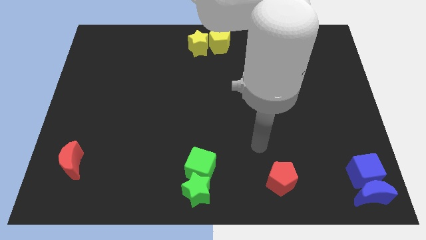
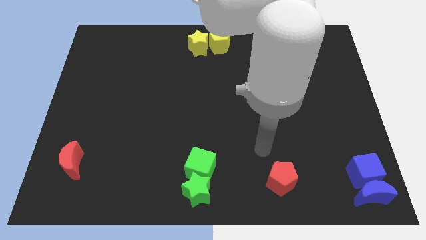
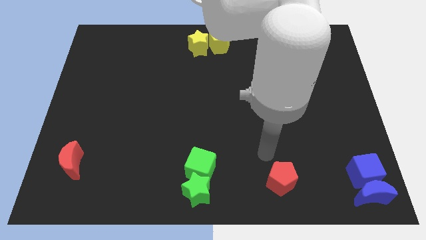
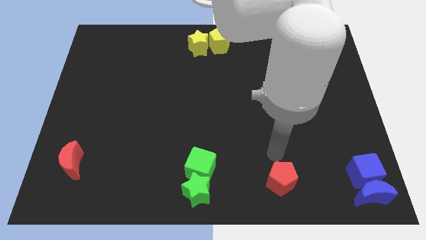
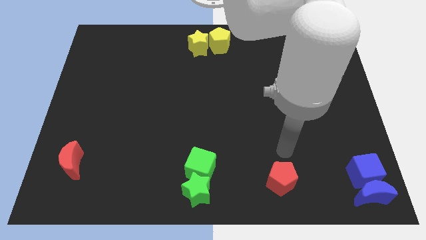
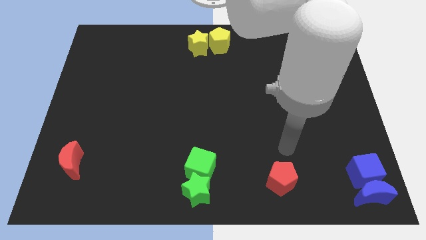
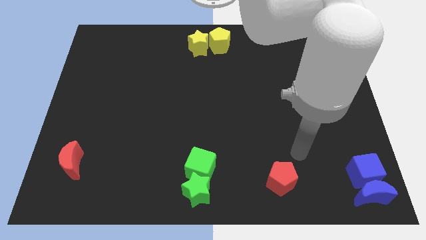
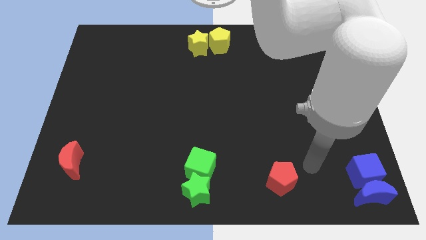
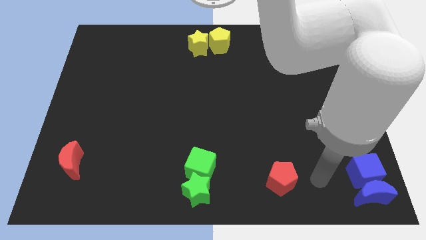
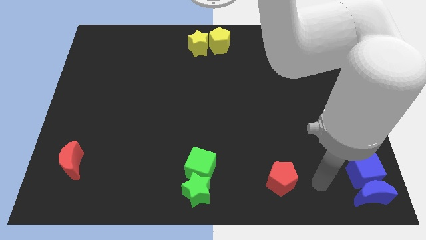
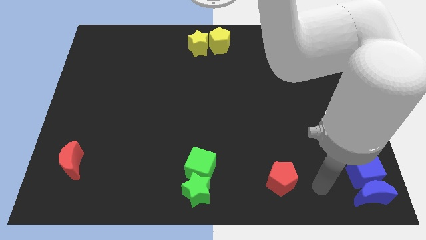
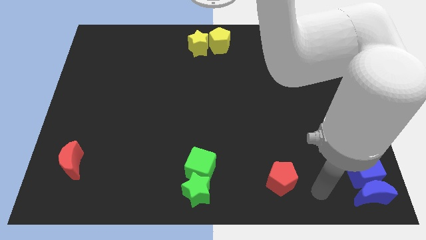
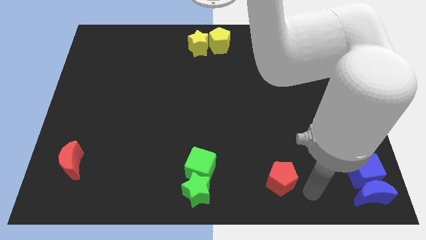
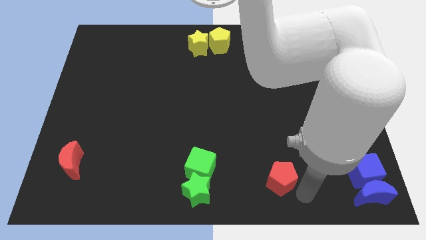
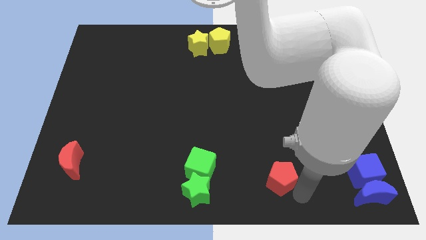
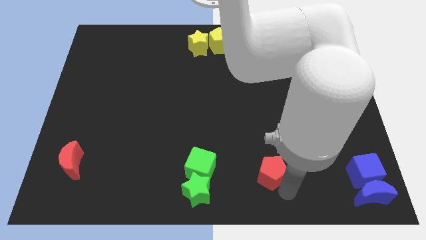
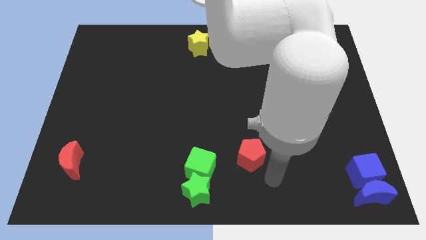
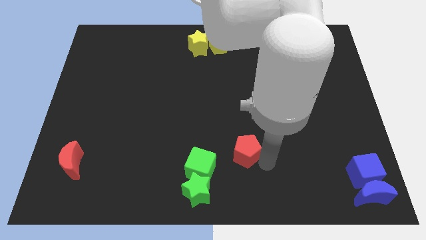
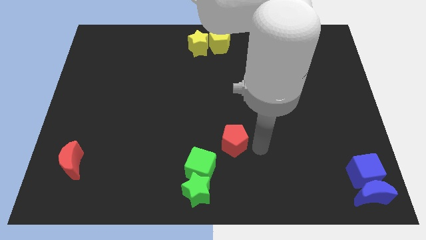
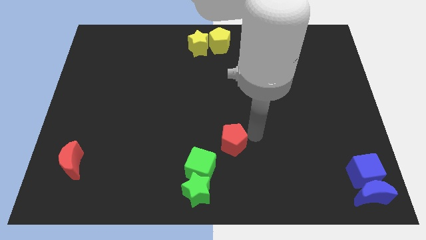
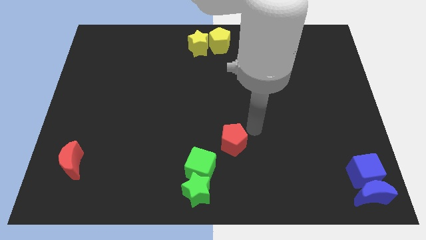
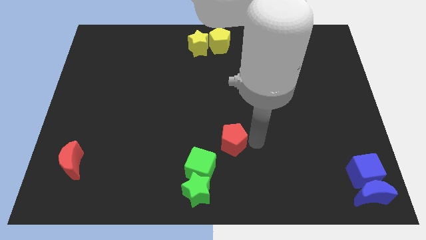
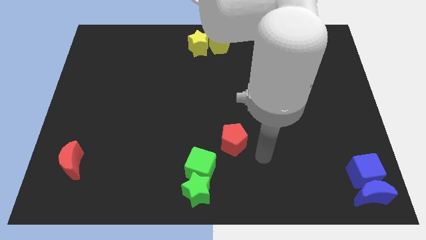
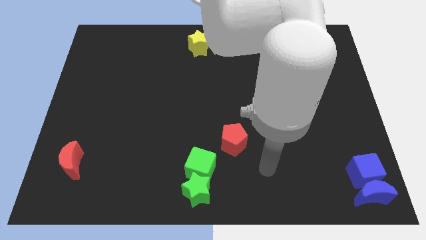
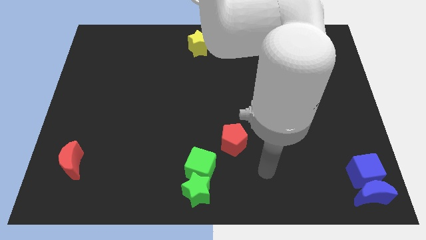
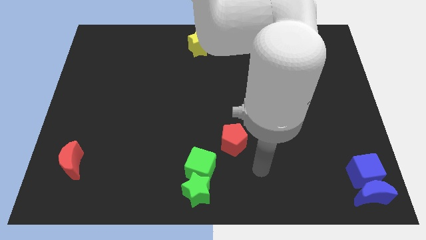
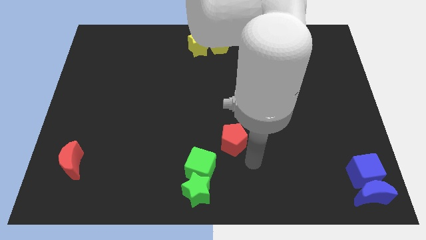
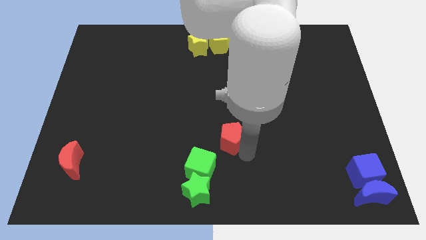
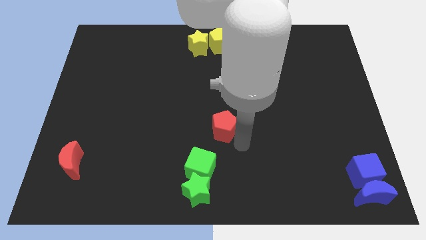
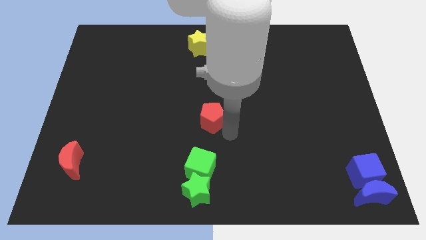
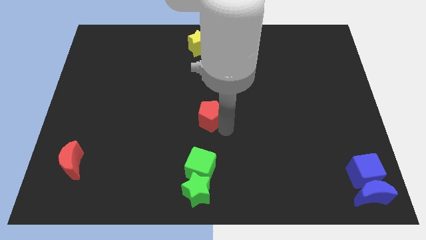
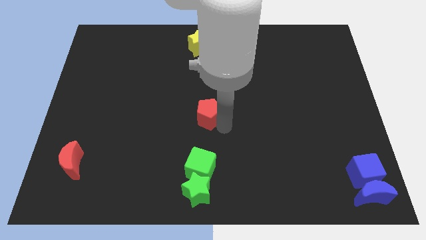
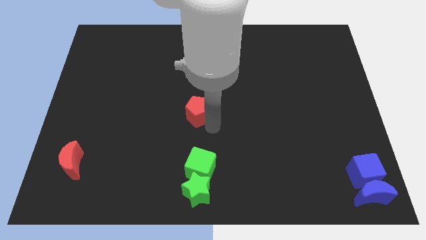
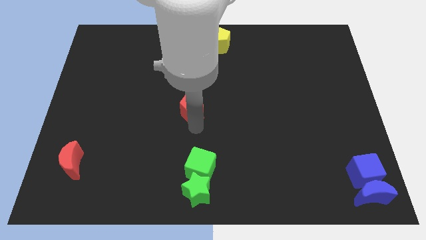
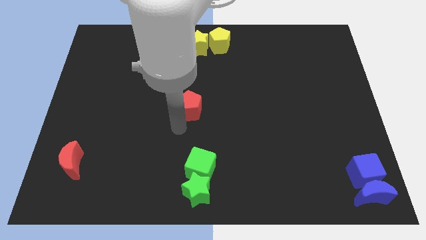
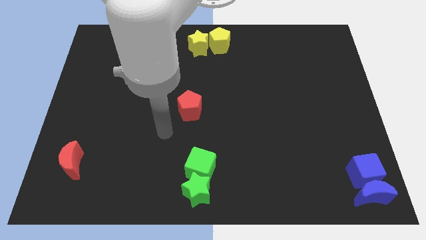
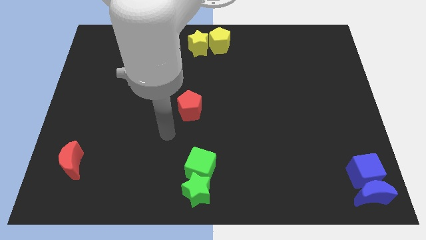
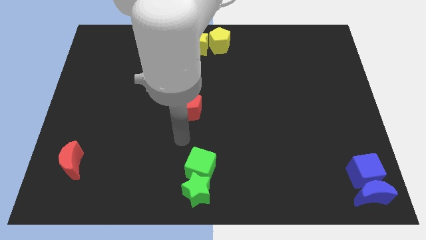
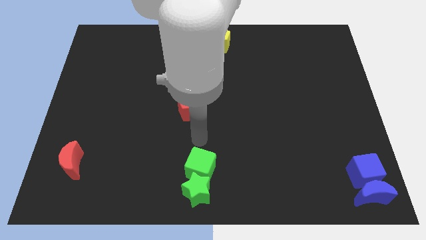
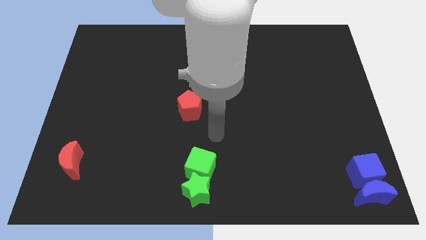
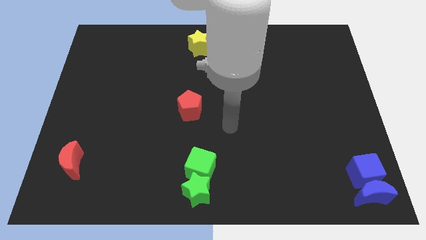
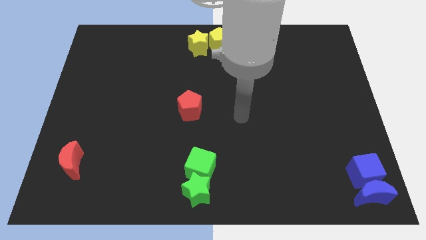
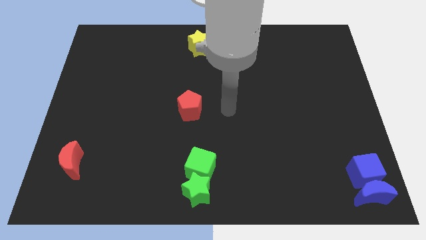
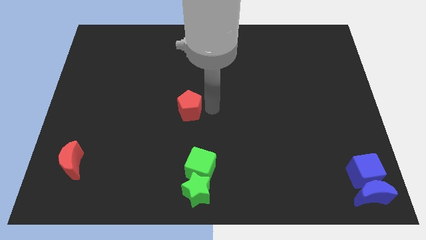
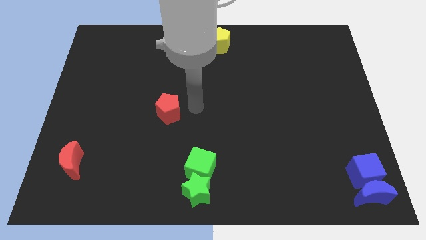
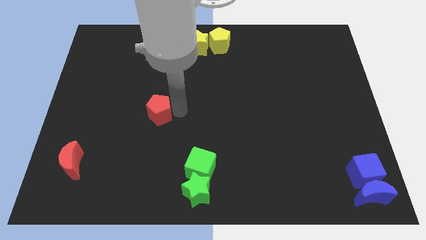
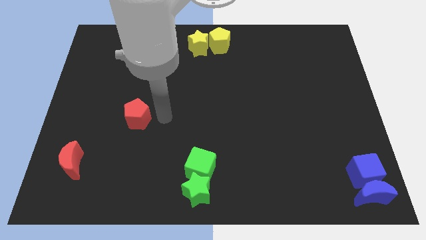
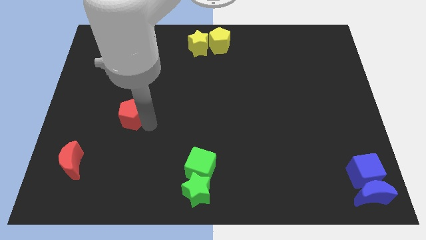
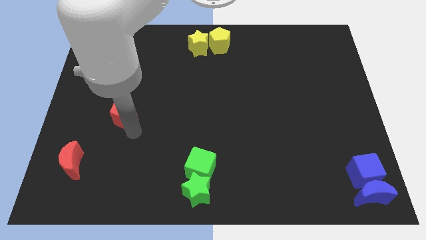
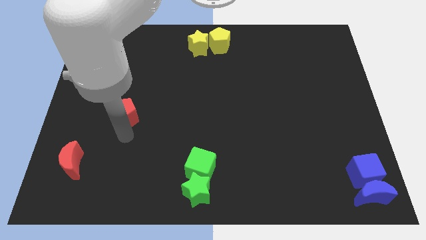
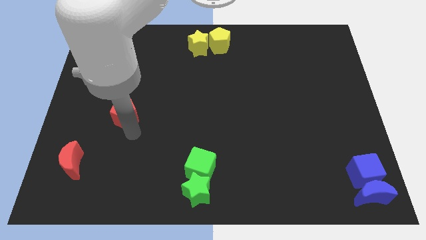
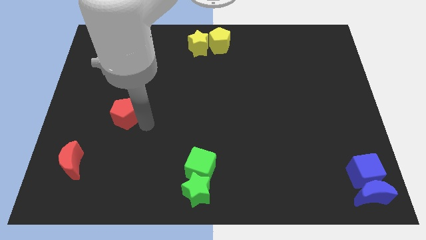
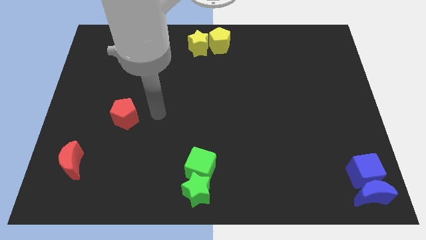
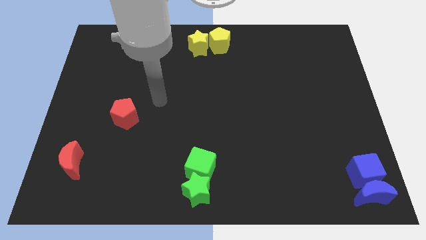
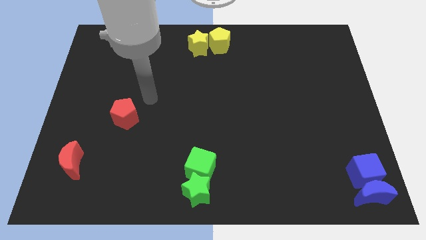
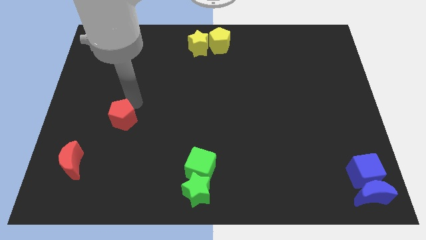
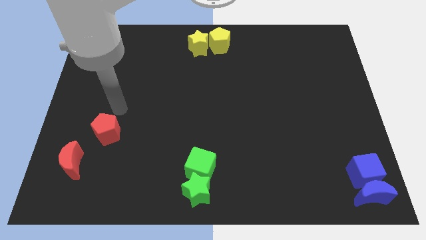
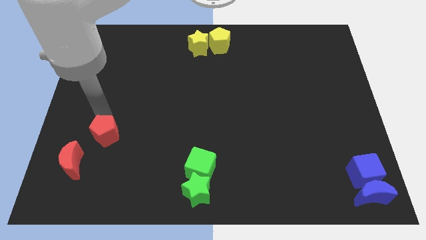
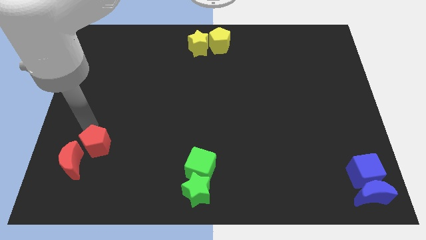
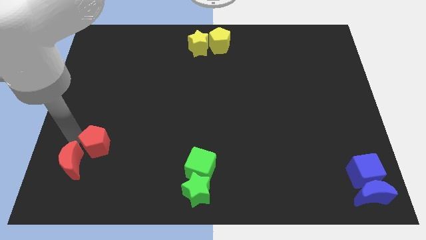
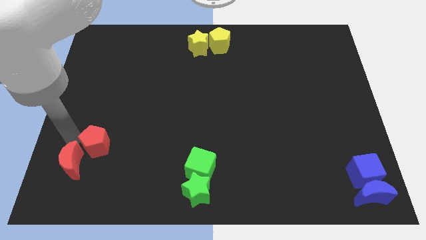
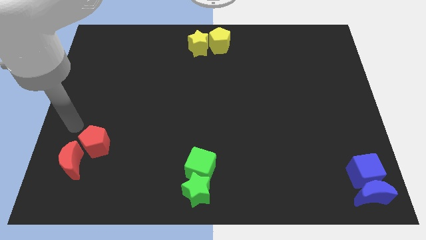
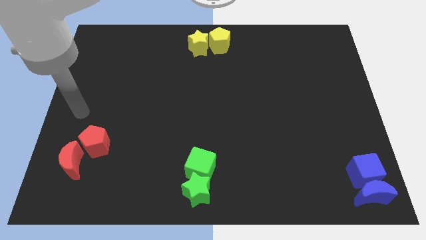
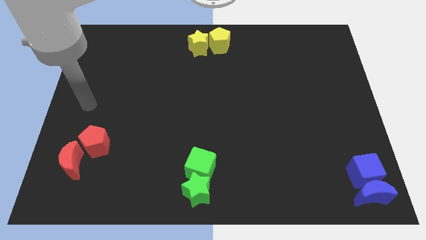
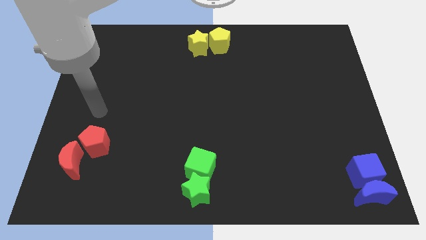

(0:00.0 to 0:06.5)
place the red pentagon towards the top of red crescent

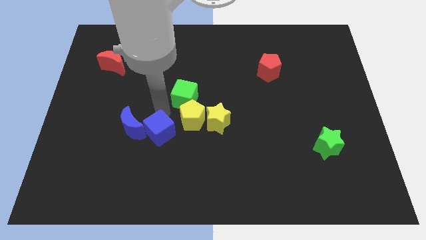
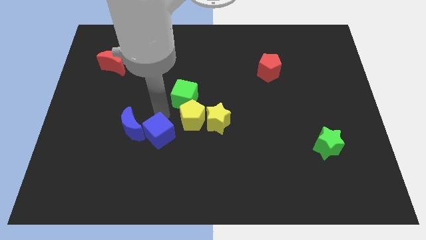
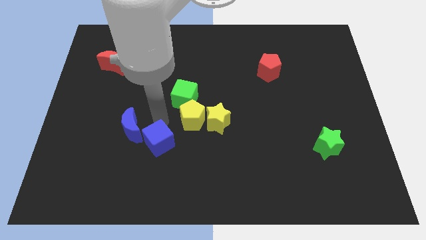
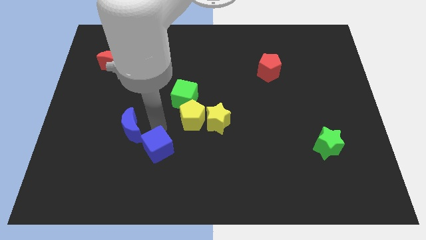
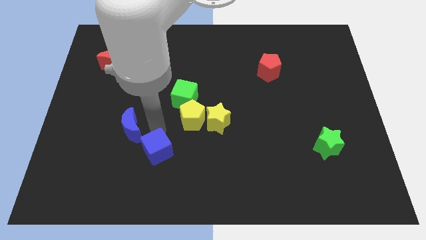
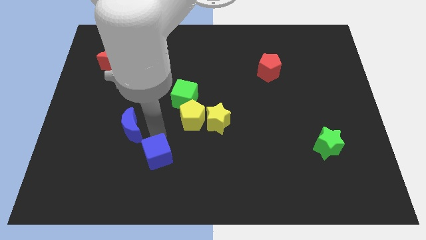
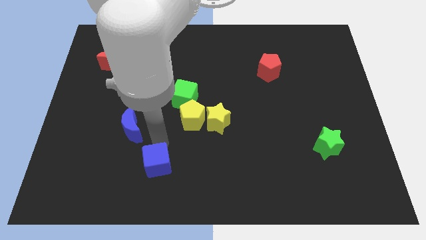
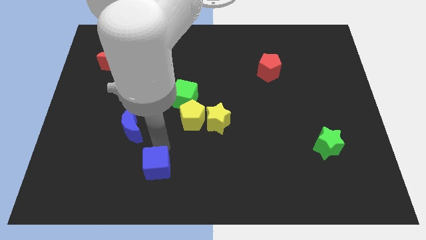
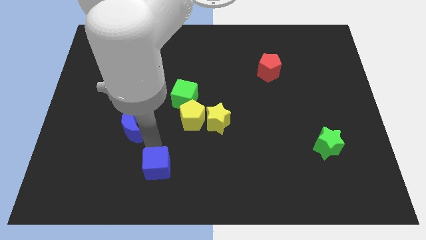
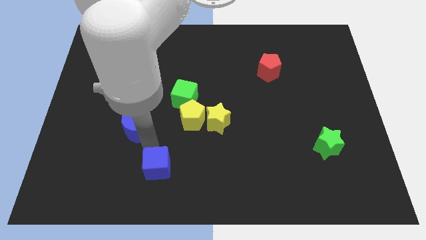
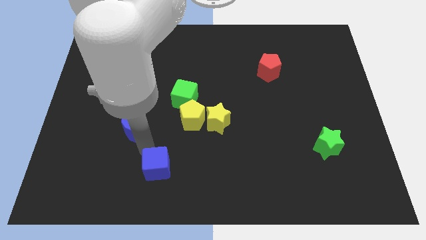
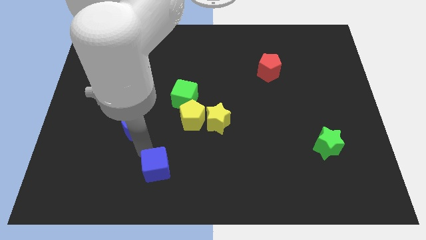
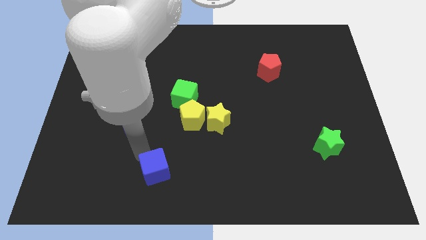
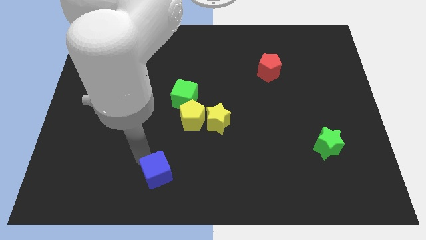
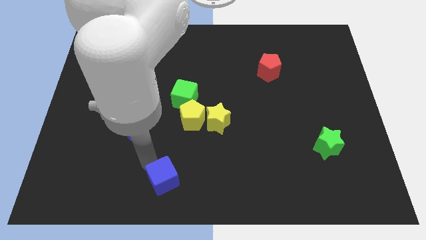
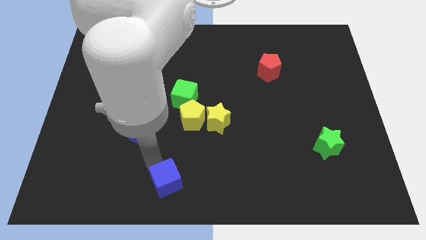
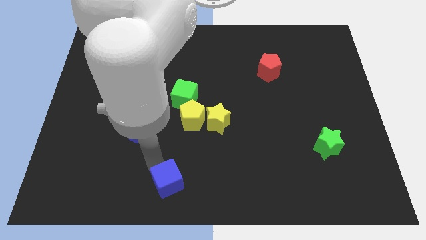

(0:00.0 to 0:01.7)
separate the blue cube from the group of blocks

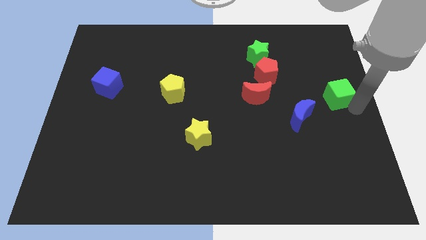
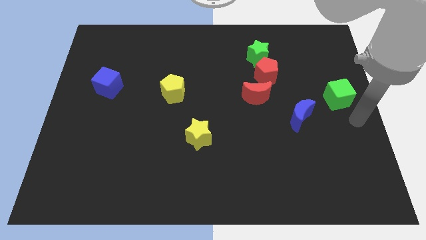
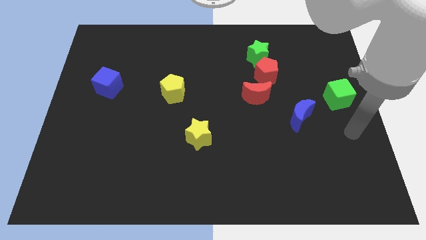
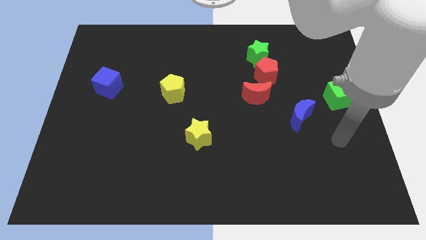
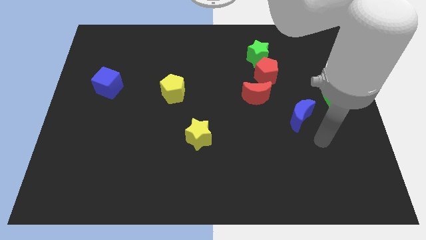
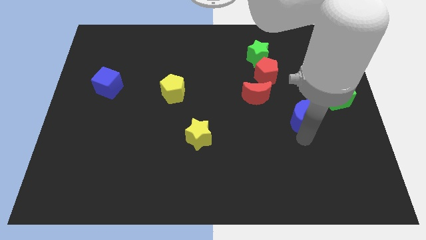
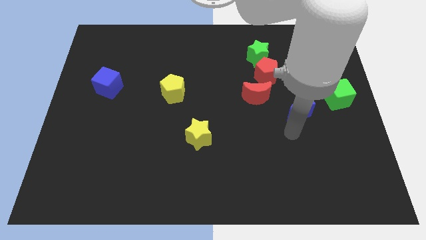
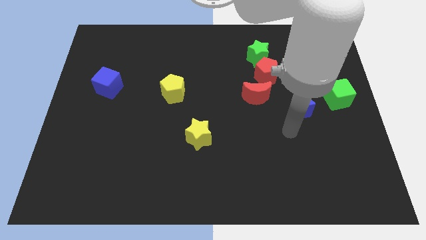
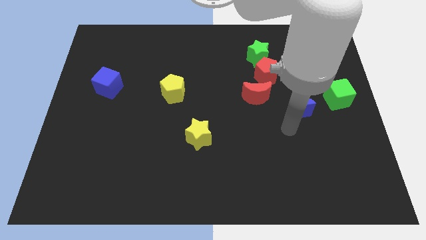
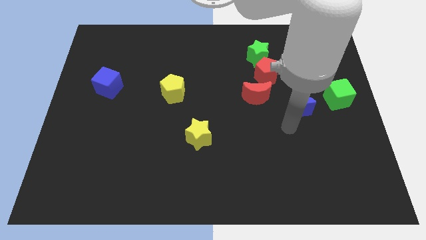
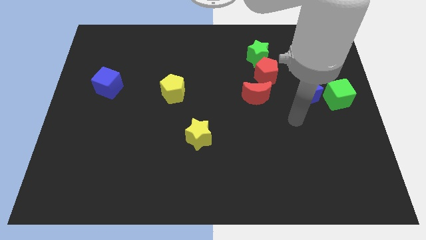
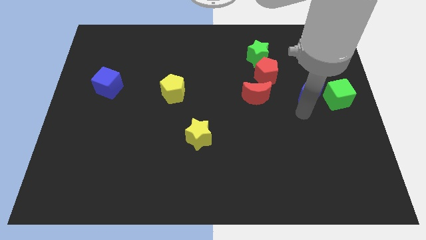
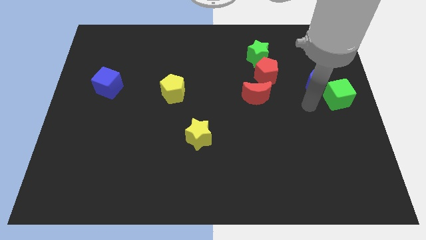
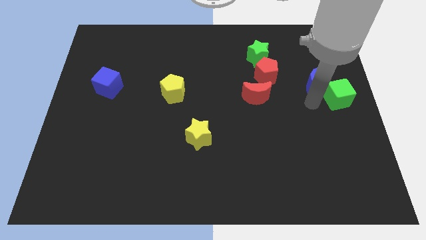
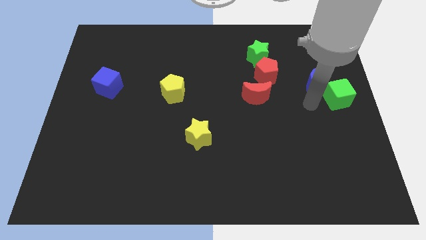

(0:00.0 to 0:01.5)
move the blue moon diagonally top left to the green cube
